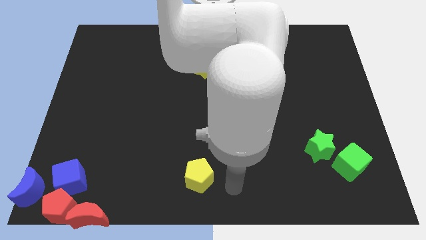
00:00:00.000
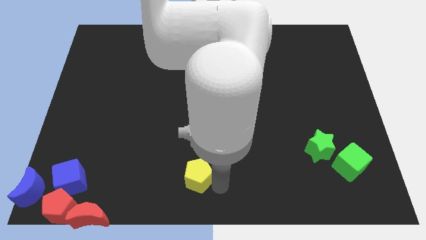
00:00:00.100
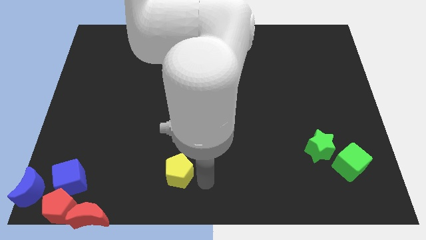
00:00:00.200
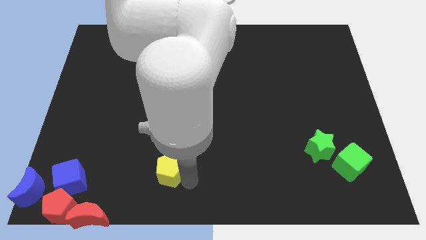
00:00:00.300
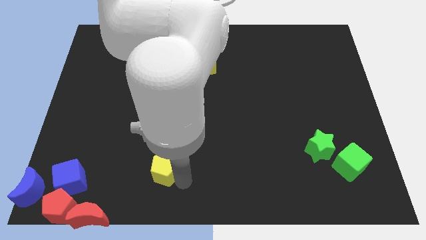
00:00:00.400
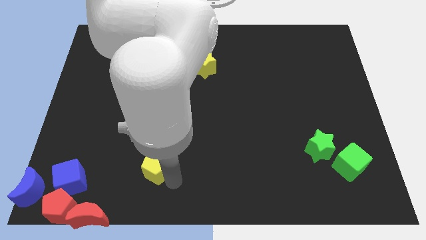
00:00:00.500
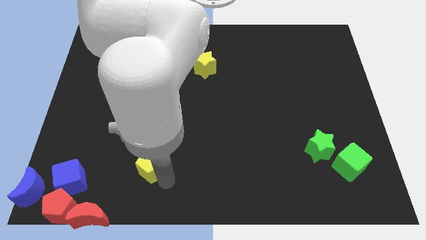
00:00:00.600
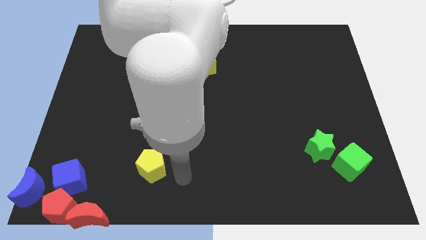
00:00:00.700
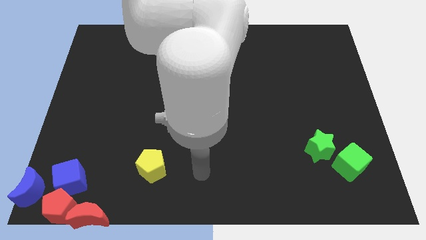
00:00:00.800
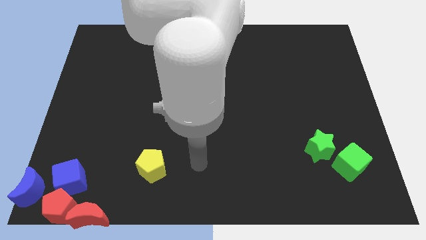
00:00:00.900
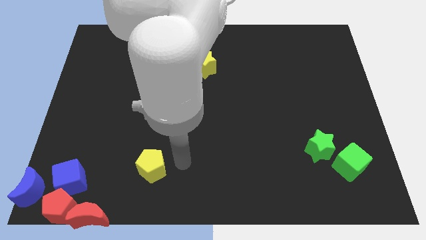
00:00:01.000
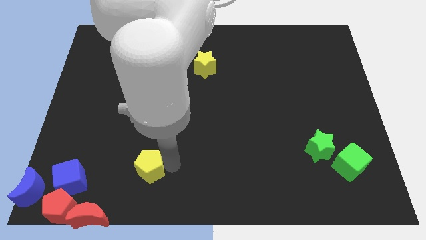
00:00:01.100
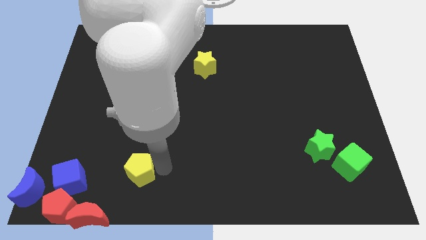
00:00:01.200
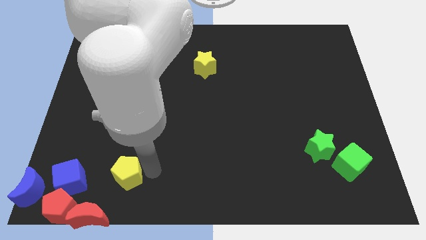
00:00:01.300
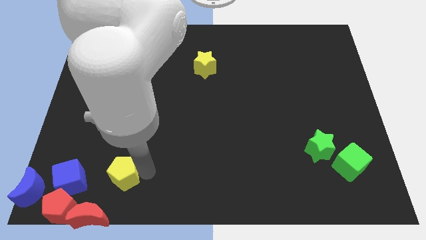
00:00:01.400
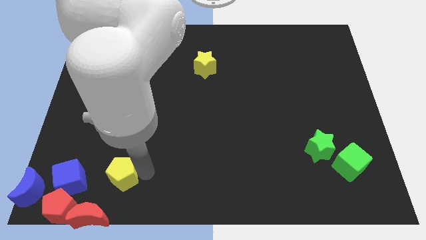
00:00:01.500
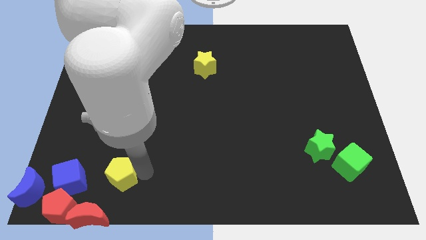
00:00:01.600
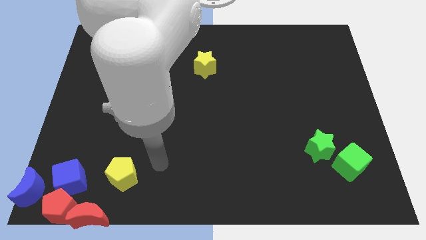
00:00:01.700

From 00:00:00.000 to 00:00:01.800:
push the yellow pentagon to the right side of the blue cube

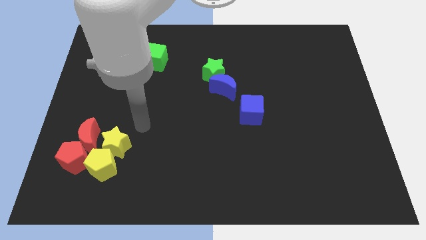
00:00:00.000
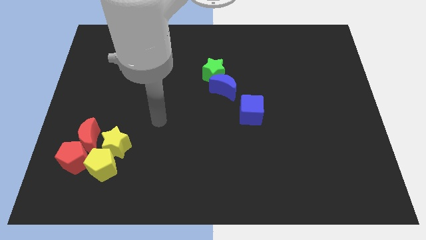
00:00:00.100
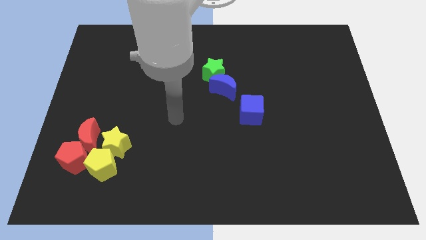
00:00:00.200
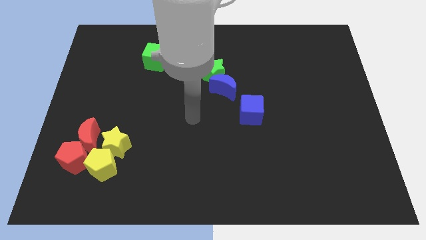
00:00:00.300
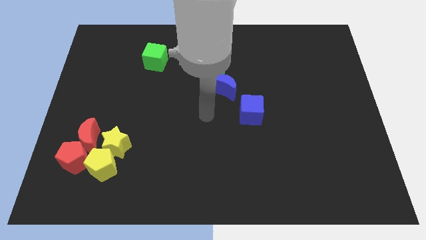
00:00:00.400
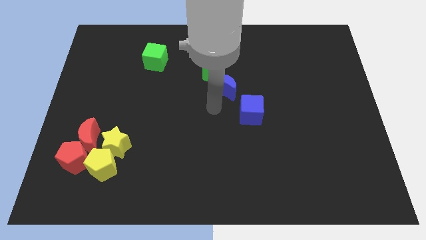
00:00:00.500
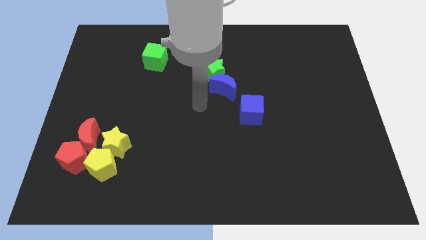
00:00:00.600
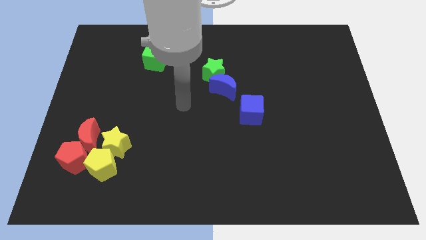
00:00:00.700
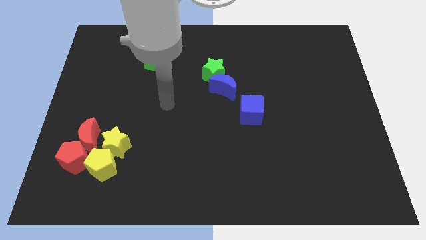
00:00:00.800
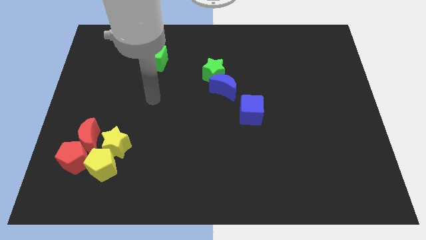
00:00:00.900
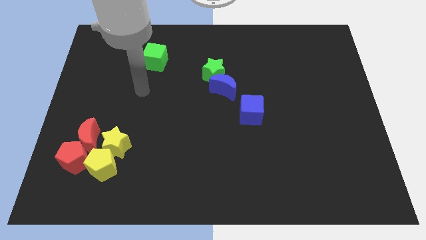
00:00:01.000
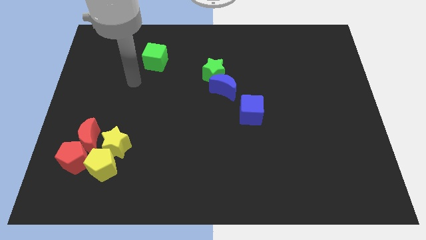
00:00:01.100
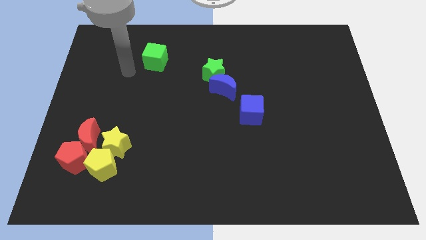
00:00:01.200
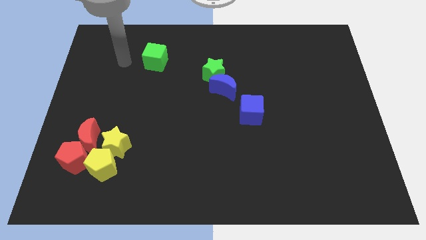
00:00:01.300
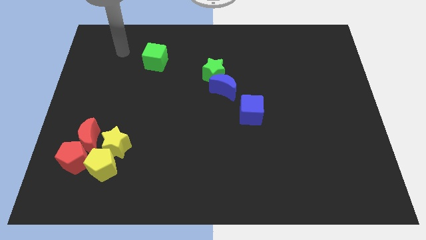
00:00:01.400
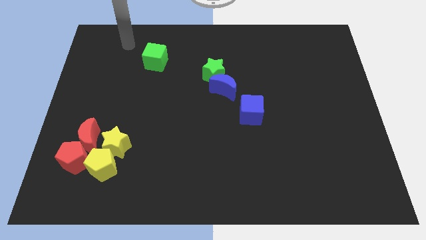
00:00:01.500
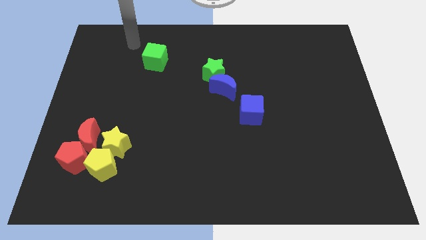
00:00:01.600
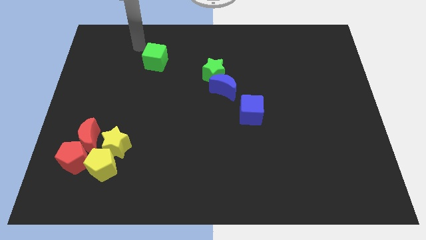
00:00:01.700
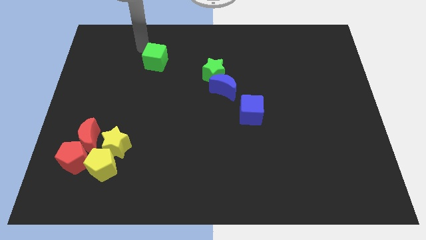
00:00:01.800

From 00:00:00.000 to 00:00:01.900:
move the arm near the green cube

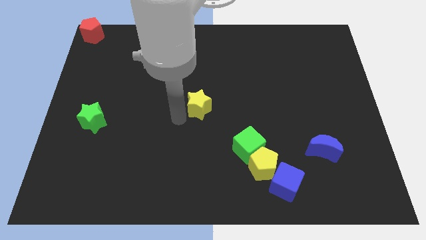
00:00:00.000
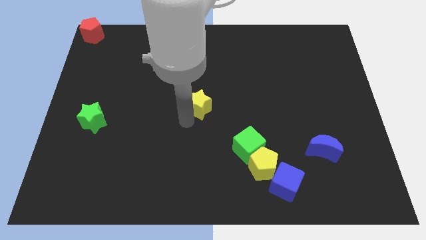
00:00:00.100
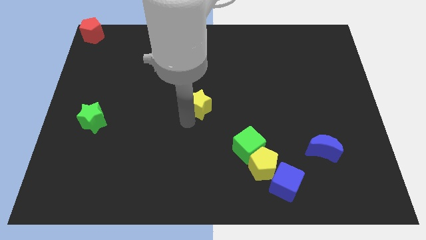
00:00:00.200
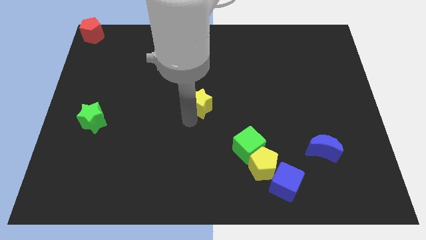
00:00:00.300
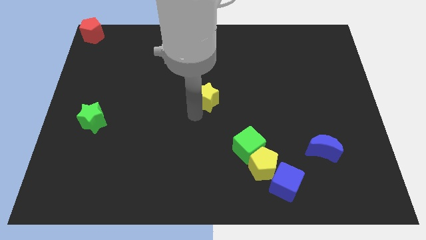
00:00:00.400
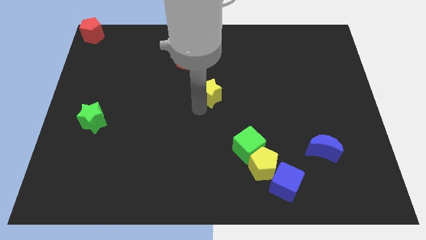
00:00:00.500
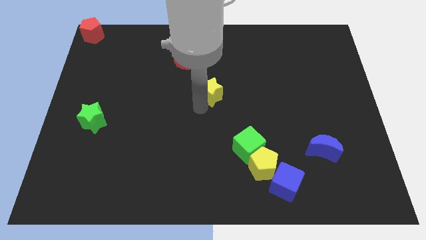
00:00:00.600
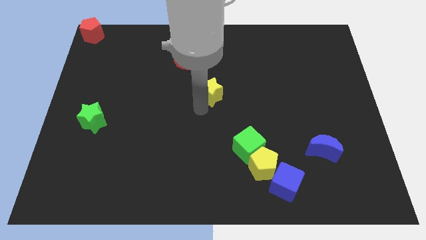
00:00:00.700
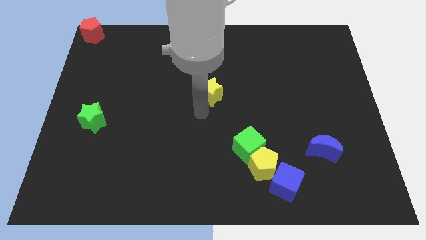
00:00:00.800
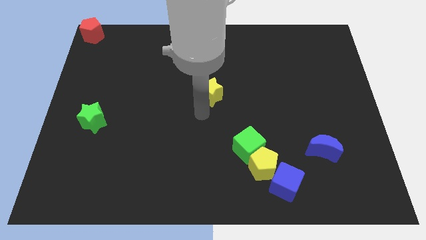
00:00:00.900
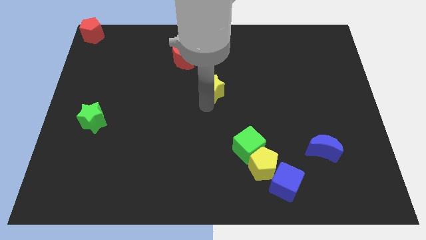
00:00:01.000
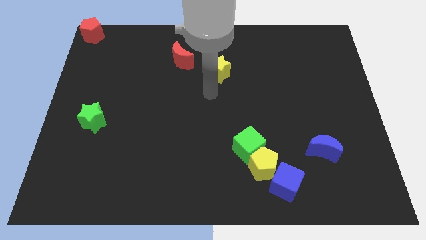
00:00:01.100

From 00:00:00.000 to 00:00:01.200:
move yellow star away from center of the board

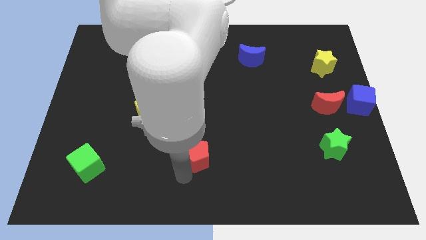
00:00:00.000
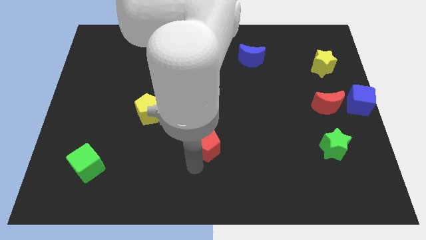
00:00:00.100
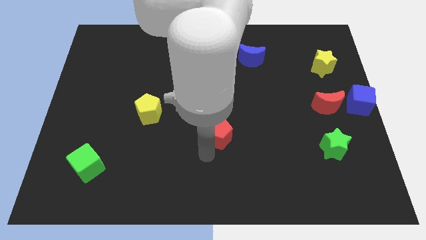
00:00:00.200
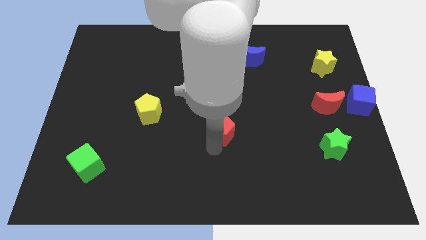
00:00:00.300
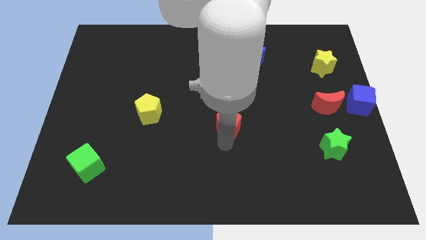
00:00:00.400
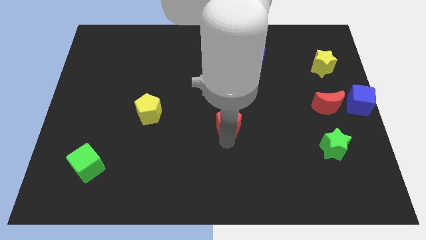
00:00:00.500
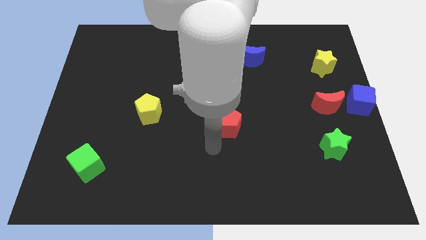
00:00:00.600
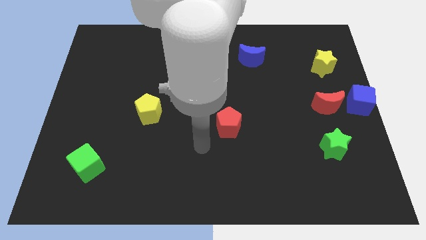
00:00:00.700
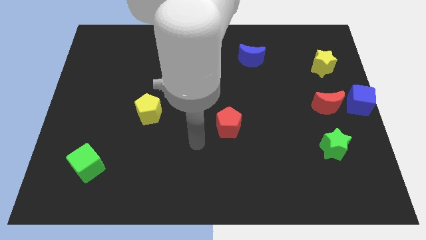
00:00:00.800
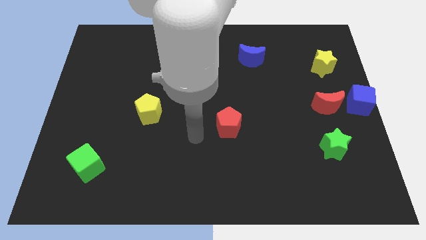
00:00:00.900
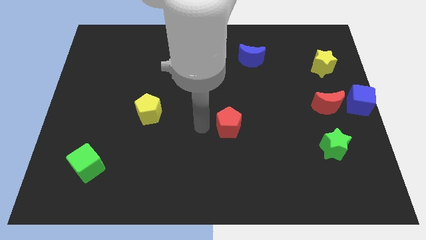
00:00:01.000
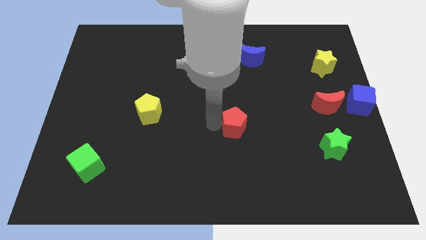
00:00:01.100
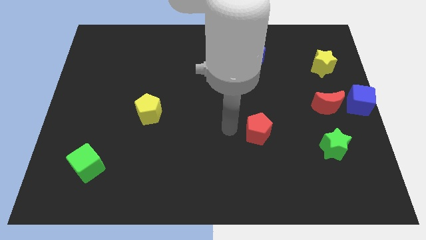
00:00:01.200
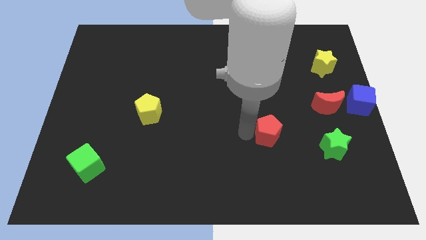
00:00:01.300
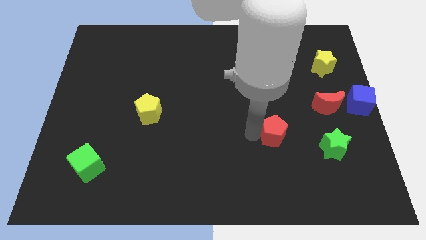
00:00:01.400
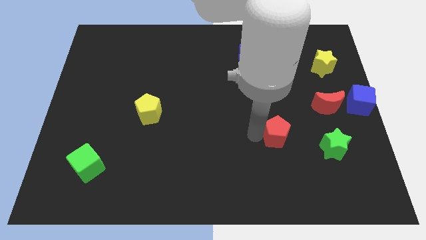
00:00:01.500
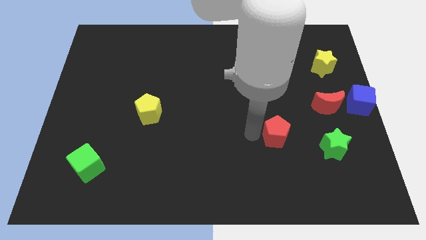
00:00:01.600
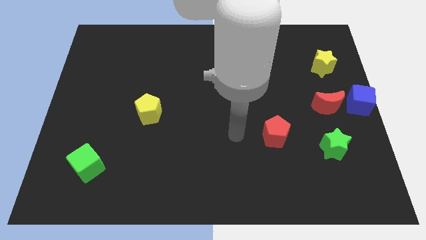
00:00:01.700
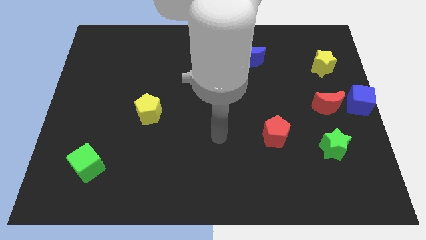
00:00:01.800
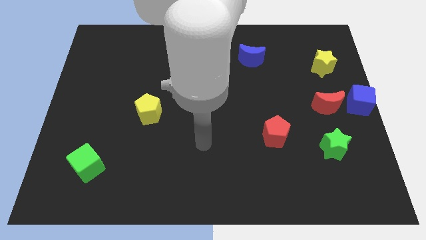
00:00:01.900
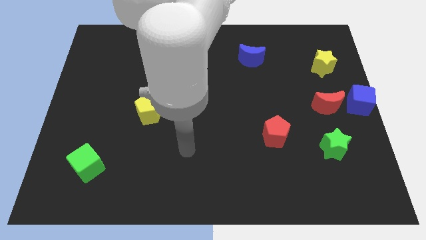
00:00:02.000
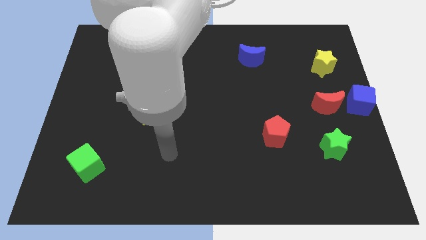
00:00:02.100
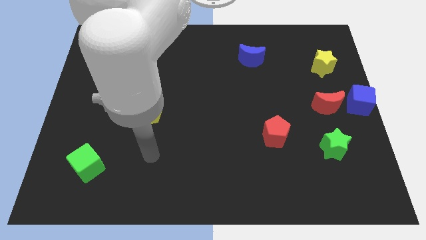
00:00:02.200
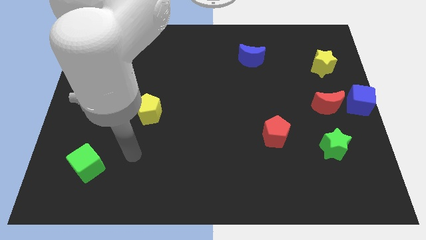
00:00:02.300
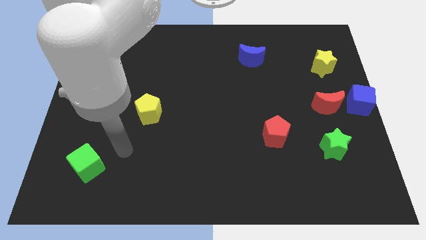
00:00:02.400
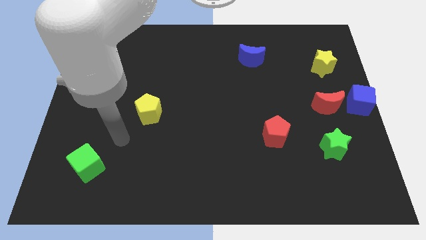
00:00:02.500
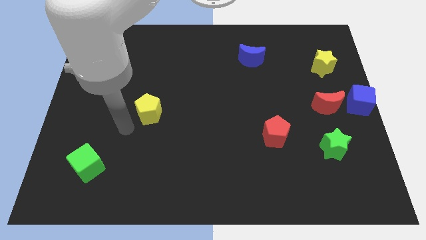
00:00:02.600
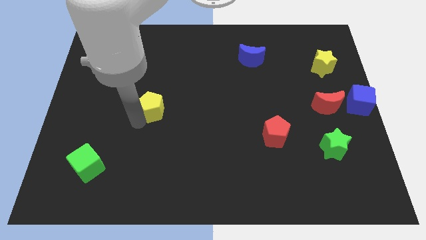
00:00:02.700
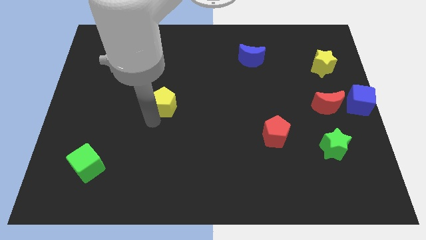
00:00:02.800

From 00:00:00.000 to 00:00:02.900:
place the red pentagon towards the top left side of the green star

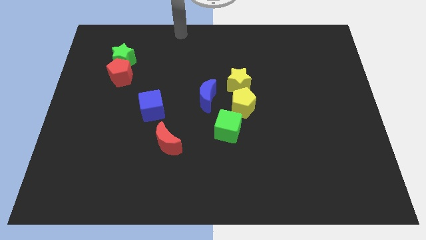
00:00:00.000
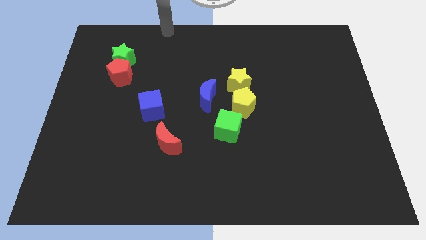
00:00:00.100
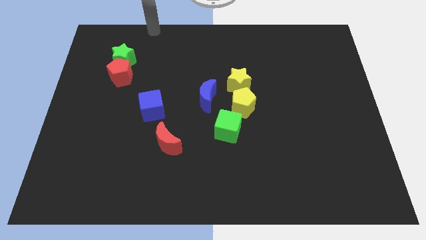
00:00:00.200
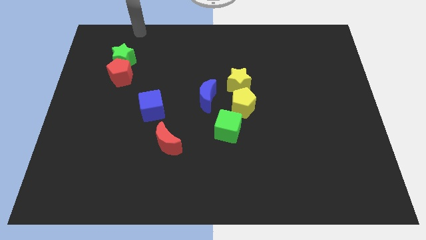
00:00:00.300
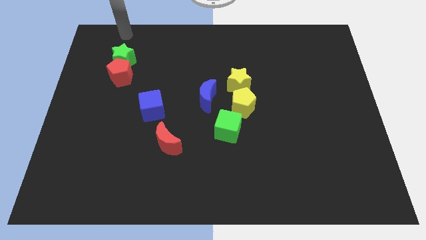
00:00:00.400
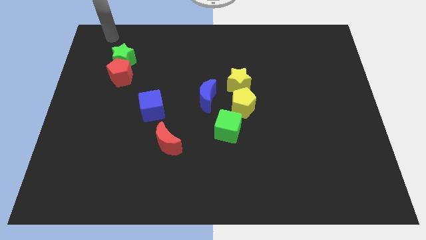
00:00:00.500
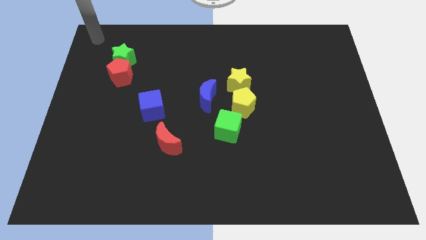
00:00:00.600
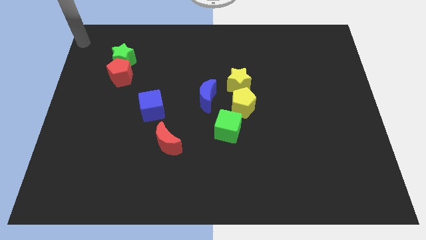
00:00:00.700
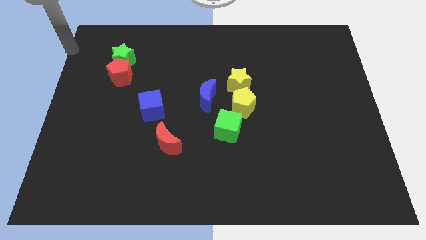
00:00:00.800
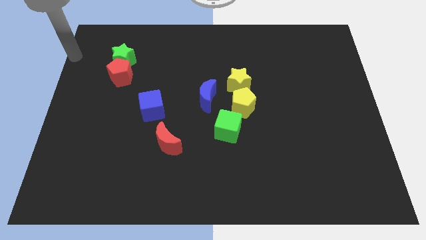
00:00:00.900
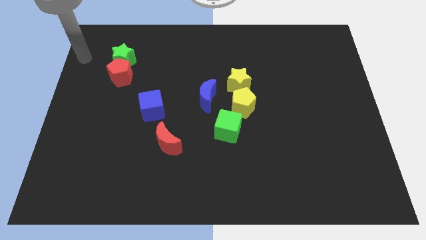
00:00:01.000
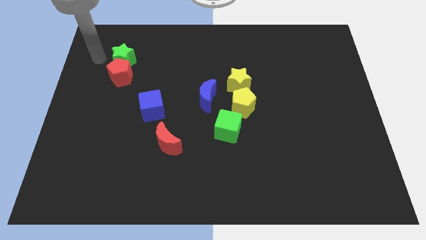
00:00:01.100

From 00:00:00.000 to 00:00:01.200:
move your arm to the left of the green star
